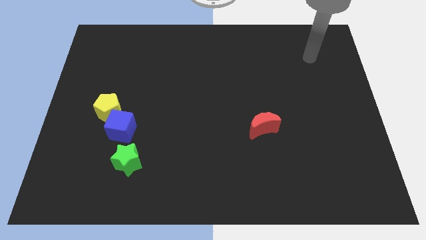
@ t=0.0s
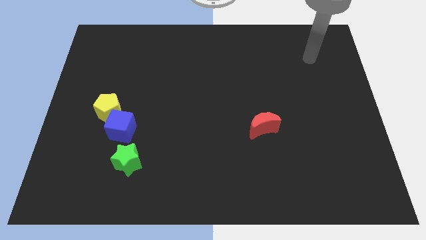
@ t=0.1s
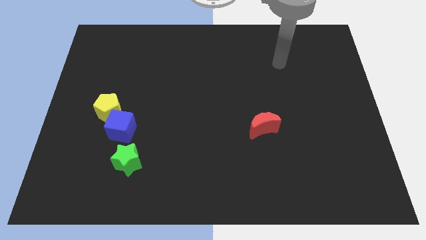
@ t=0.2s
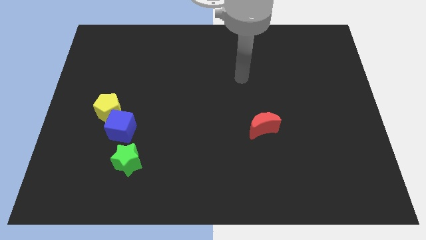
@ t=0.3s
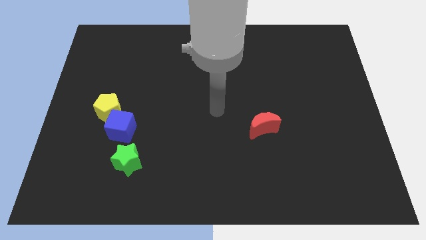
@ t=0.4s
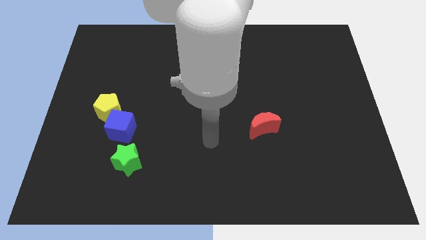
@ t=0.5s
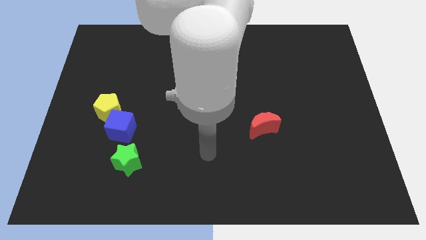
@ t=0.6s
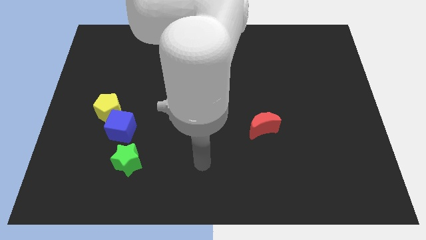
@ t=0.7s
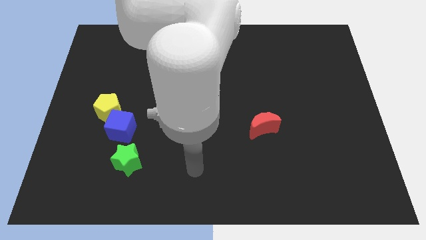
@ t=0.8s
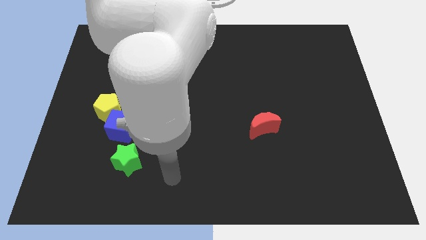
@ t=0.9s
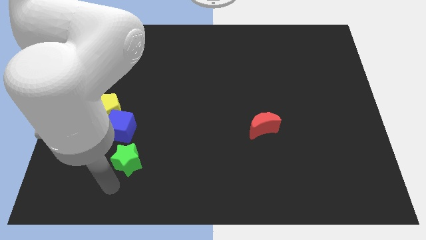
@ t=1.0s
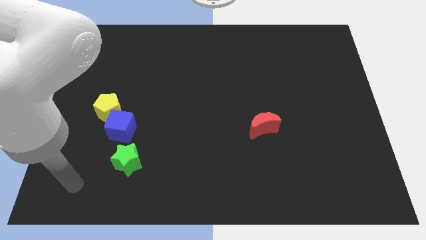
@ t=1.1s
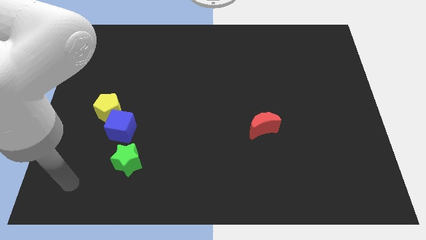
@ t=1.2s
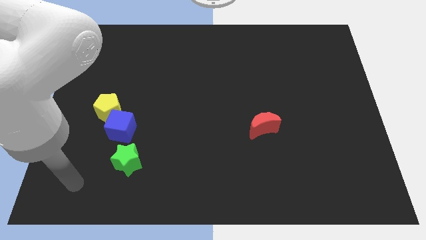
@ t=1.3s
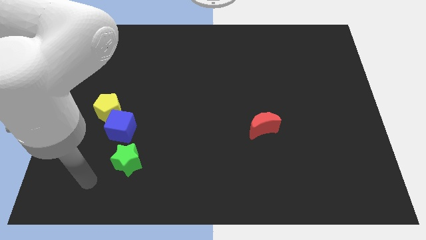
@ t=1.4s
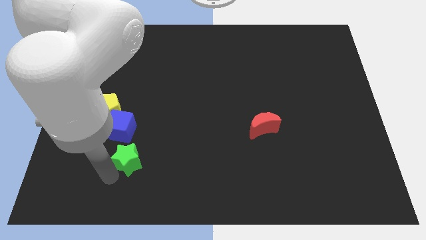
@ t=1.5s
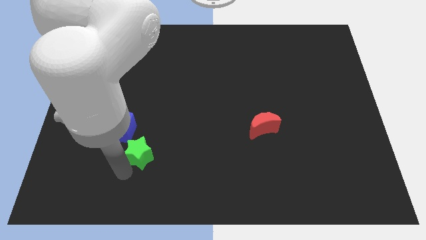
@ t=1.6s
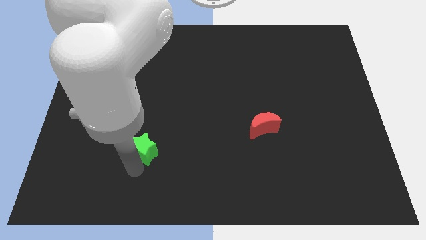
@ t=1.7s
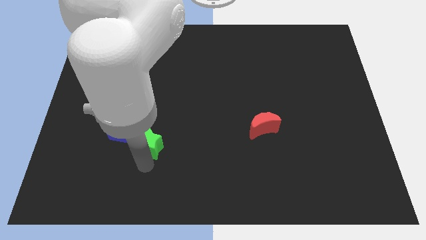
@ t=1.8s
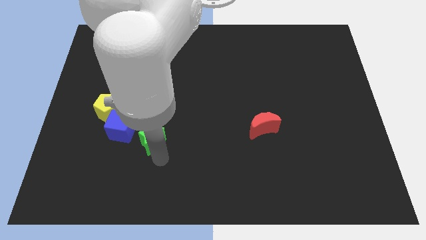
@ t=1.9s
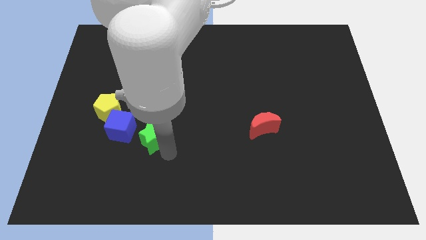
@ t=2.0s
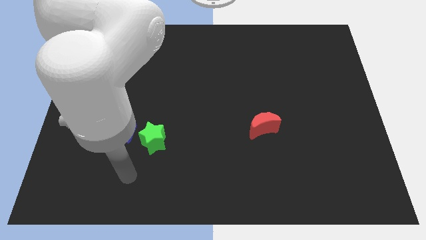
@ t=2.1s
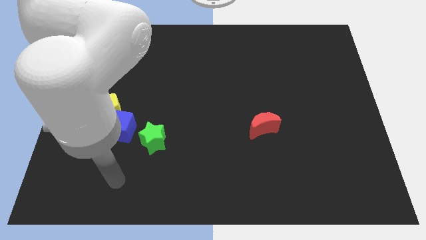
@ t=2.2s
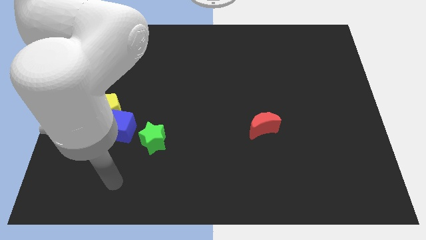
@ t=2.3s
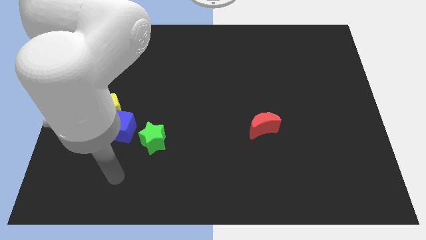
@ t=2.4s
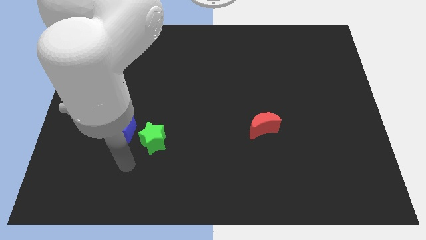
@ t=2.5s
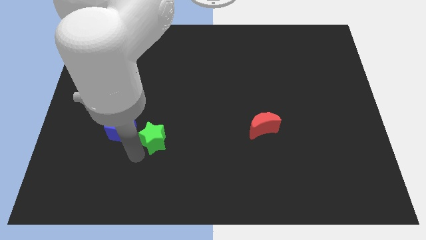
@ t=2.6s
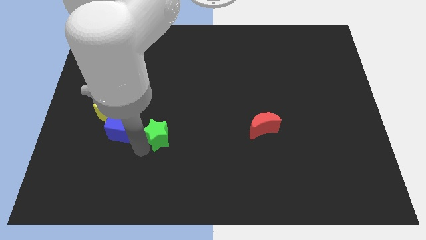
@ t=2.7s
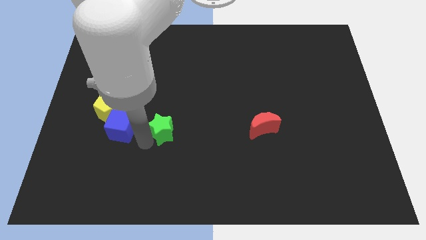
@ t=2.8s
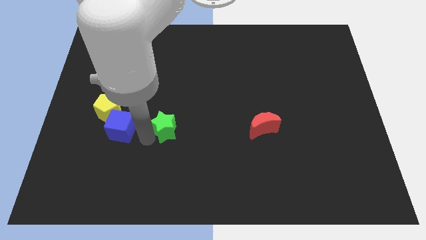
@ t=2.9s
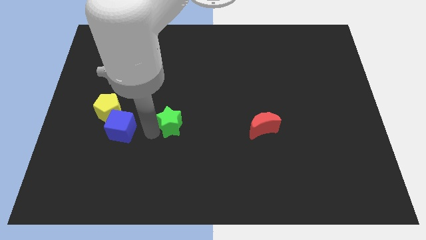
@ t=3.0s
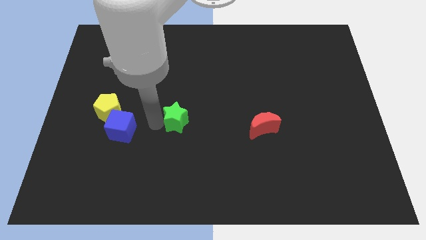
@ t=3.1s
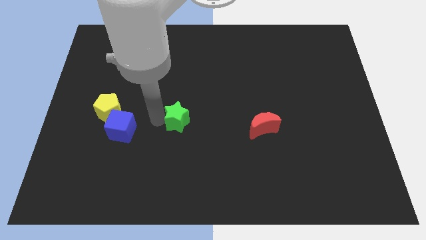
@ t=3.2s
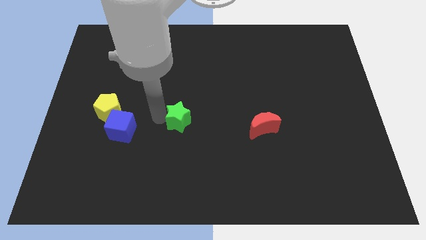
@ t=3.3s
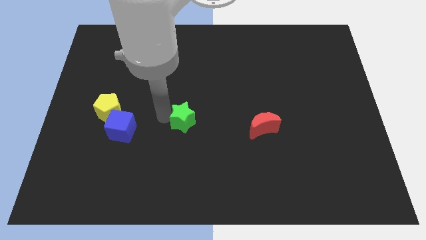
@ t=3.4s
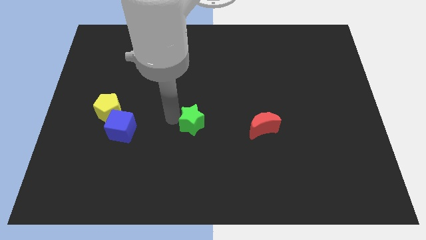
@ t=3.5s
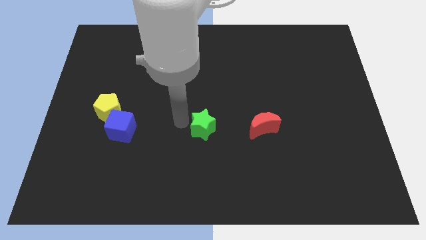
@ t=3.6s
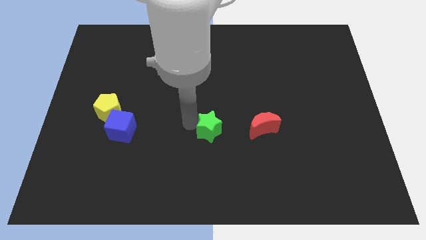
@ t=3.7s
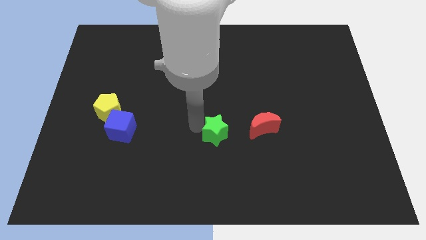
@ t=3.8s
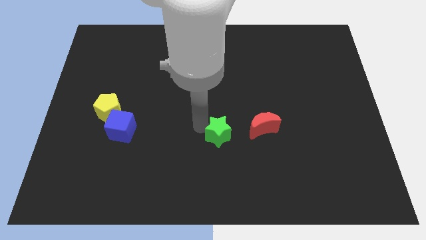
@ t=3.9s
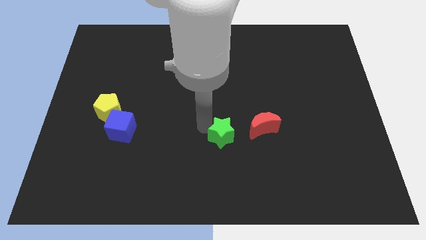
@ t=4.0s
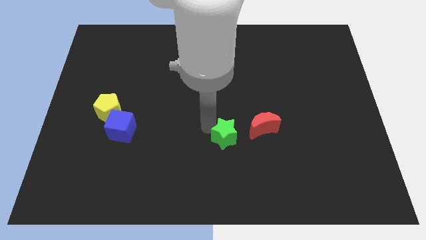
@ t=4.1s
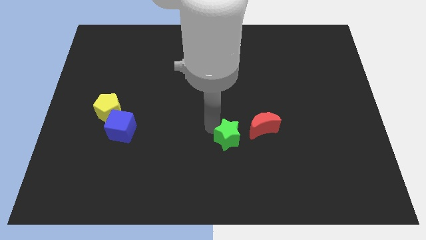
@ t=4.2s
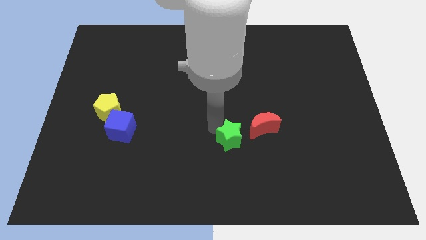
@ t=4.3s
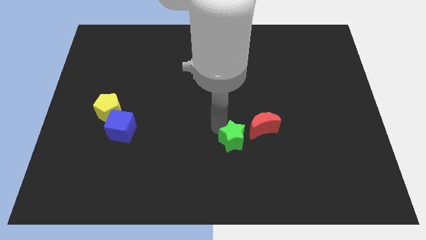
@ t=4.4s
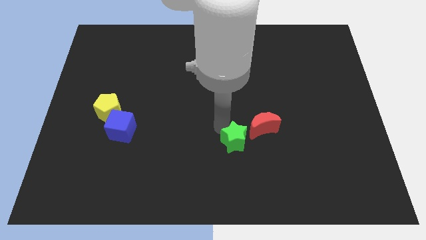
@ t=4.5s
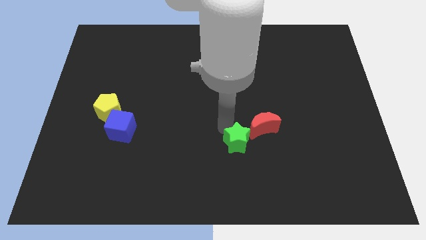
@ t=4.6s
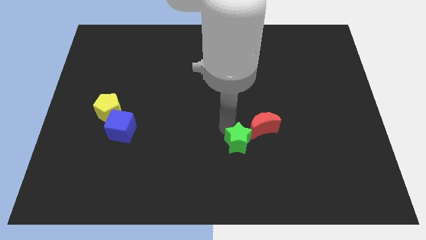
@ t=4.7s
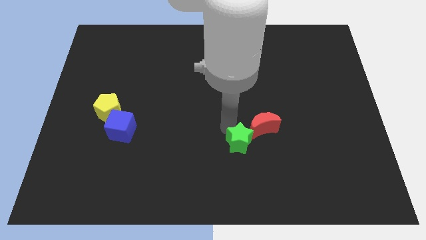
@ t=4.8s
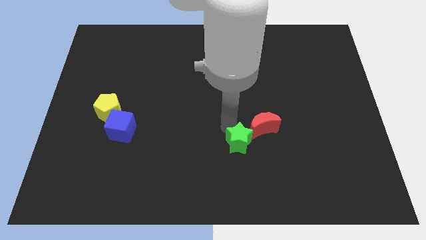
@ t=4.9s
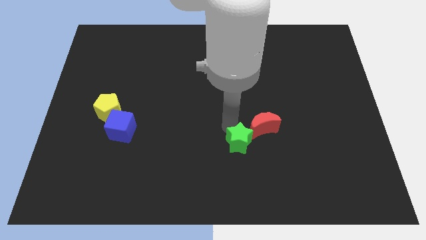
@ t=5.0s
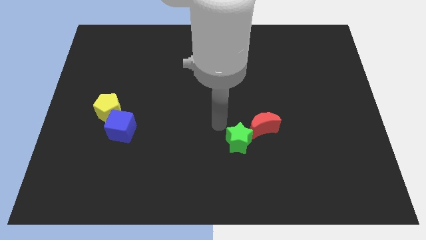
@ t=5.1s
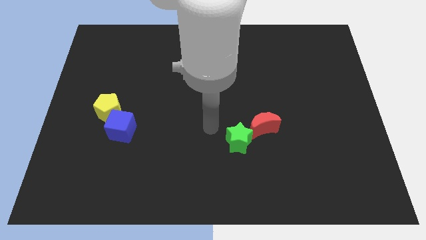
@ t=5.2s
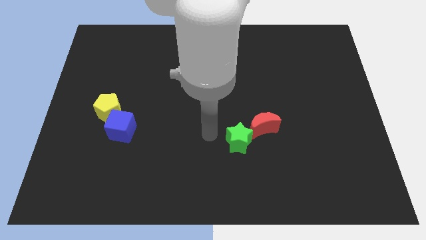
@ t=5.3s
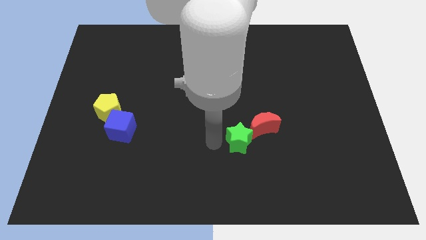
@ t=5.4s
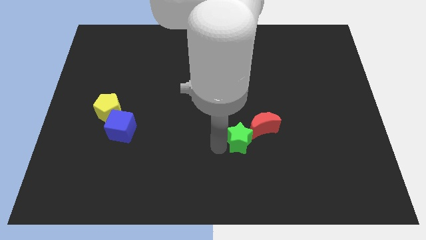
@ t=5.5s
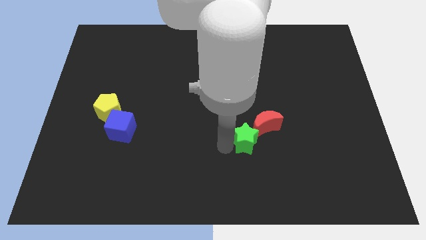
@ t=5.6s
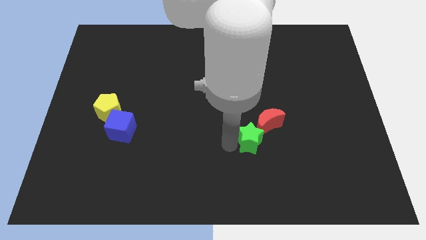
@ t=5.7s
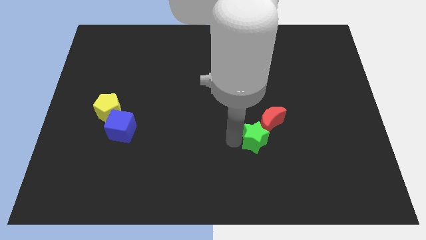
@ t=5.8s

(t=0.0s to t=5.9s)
push the star close to the moon

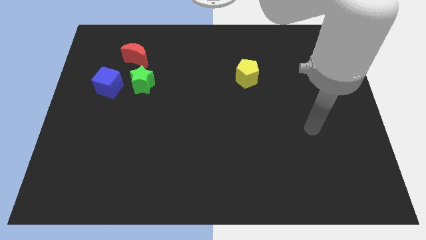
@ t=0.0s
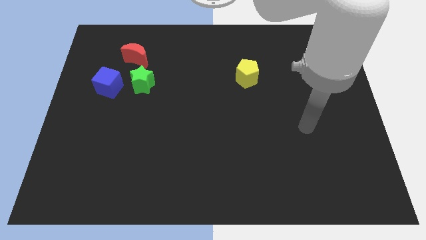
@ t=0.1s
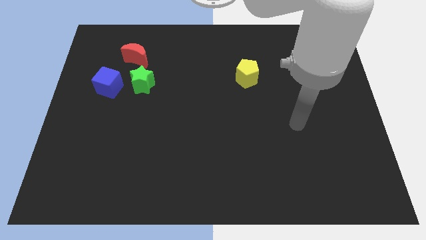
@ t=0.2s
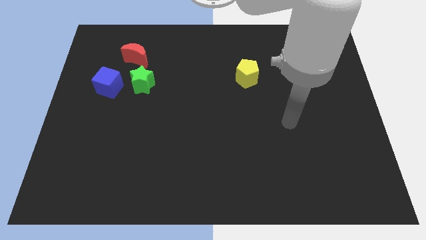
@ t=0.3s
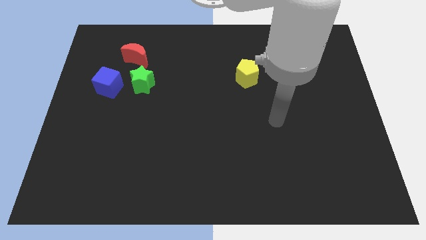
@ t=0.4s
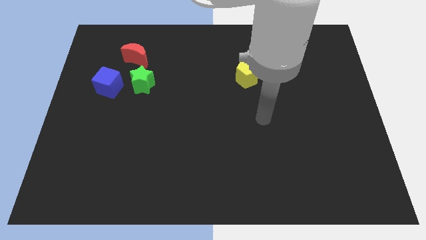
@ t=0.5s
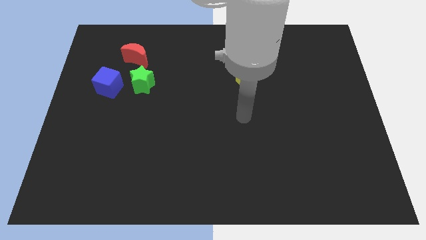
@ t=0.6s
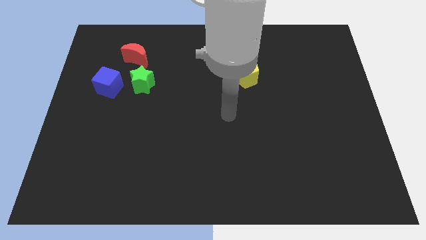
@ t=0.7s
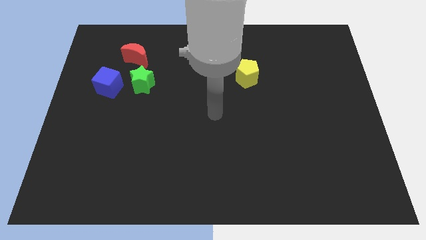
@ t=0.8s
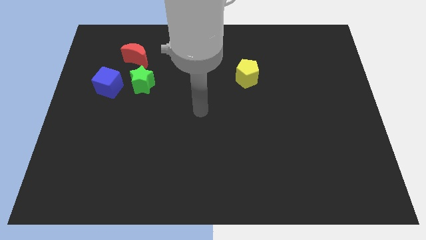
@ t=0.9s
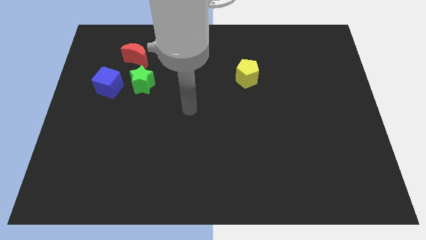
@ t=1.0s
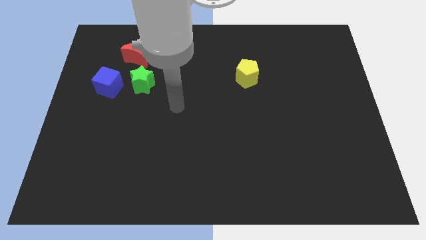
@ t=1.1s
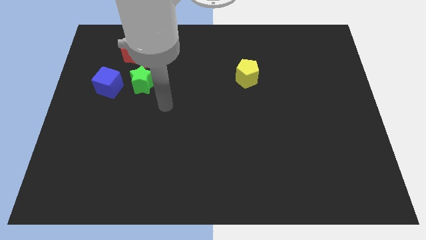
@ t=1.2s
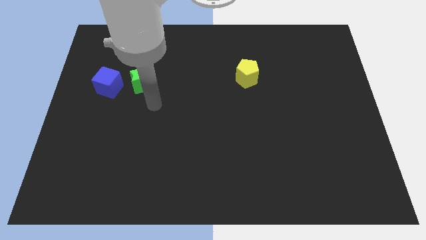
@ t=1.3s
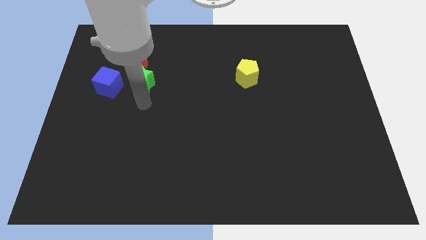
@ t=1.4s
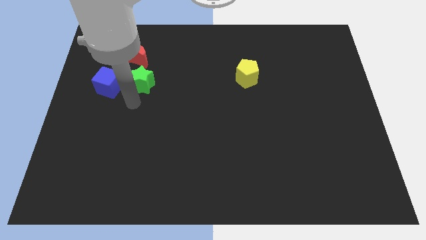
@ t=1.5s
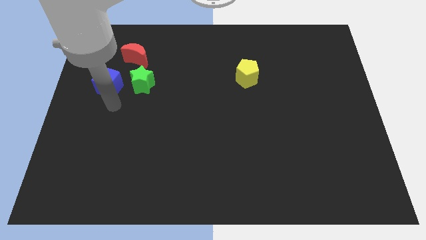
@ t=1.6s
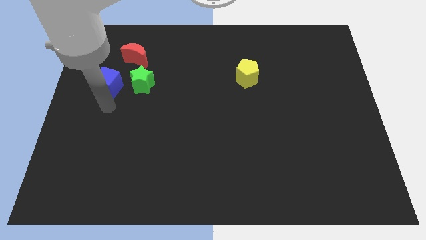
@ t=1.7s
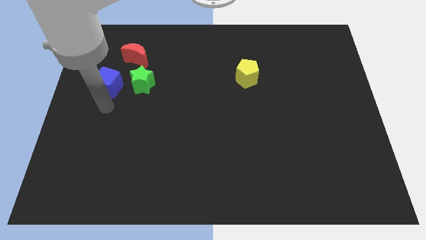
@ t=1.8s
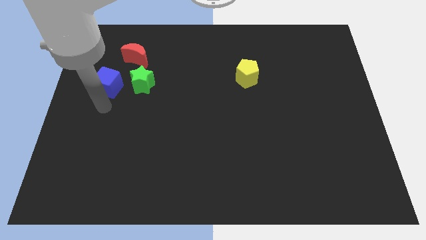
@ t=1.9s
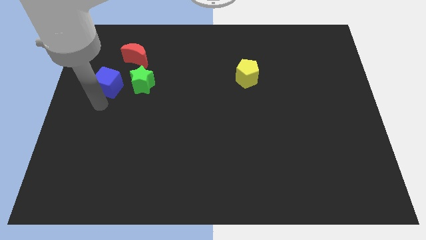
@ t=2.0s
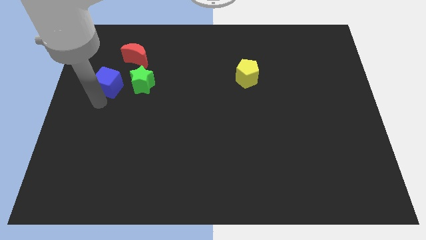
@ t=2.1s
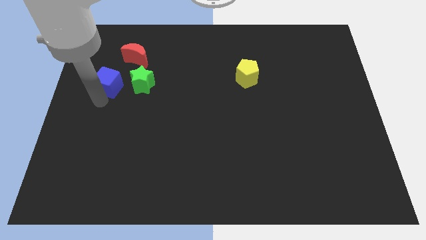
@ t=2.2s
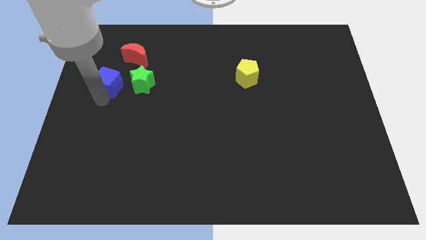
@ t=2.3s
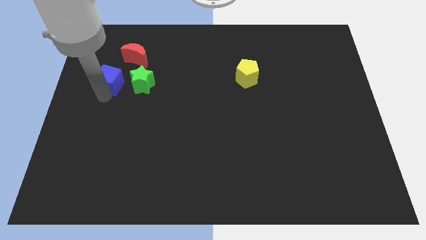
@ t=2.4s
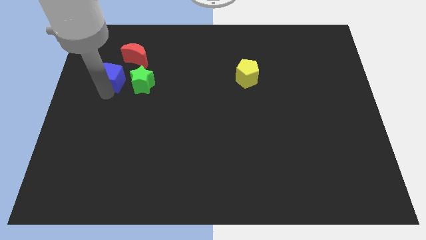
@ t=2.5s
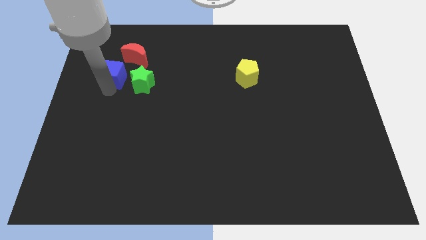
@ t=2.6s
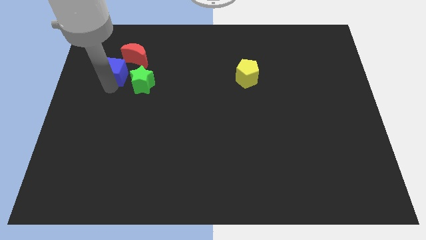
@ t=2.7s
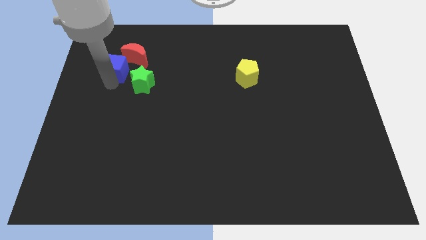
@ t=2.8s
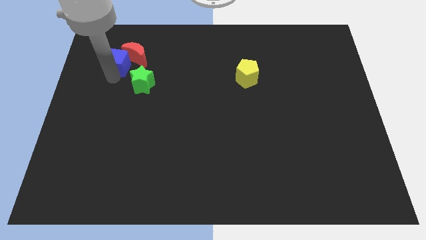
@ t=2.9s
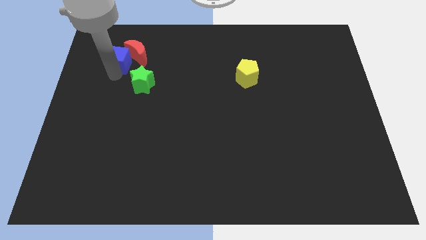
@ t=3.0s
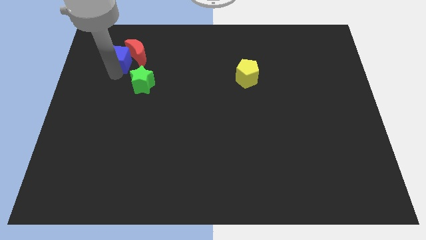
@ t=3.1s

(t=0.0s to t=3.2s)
put the blue block to the red block
